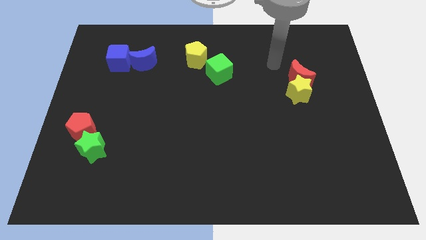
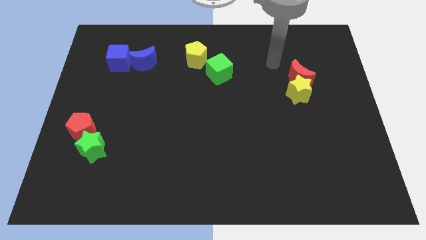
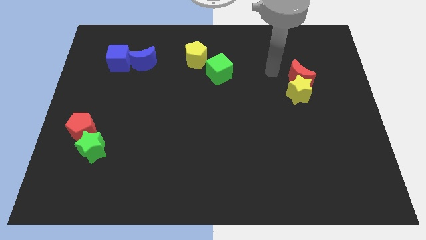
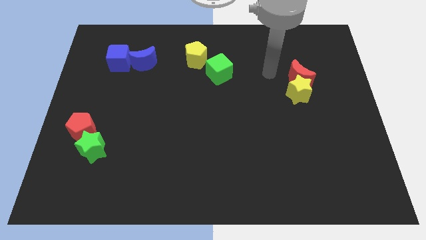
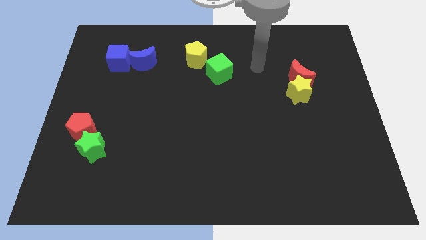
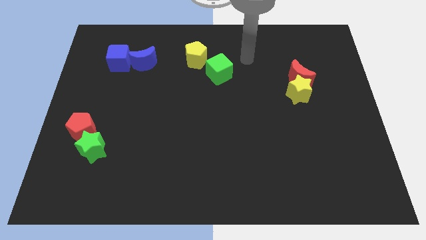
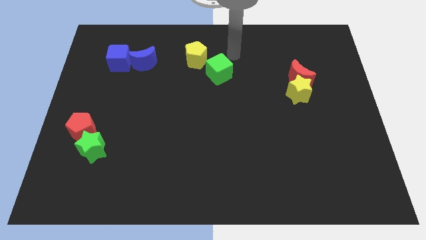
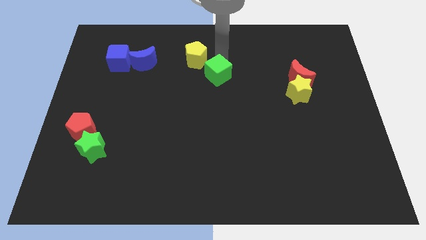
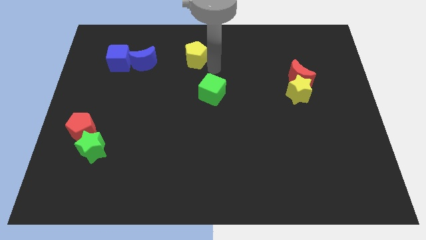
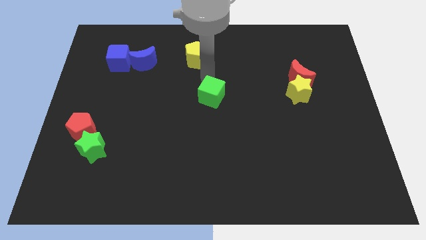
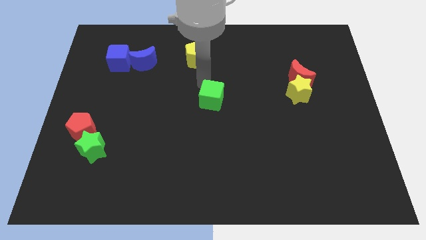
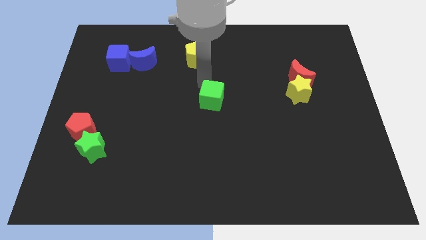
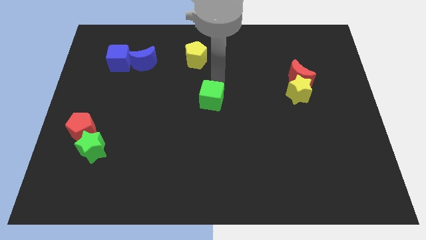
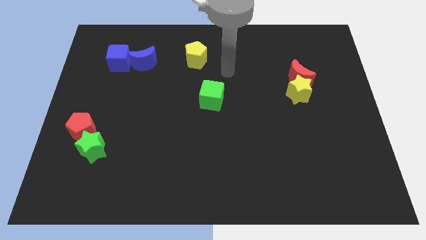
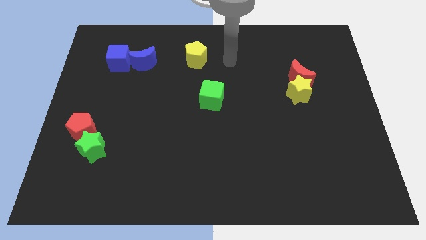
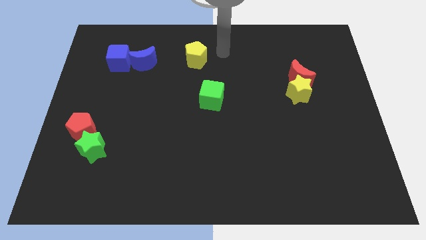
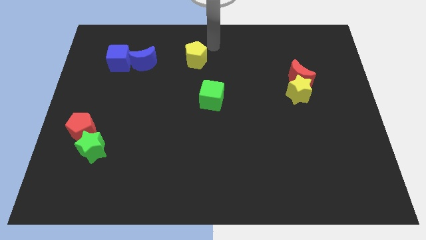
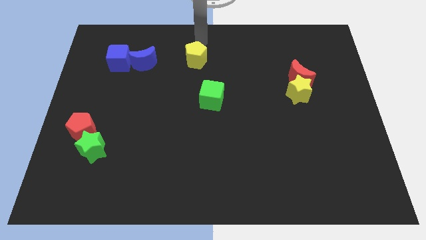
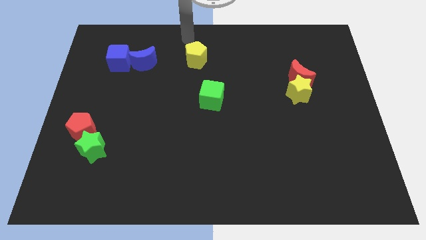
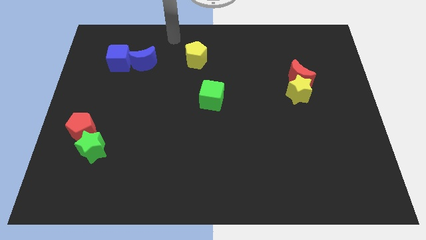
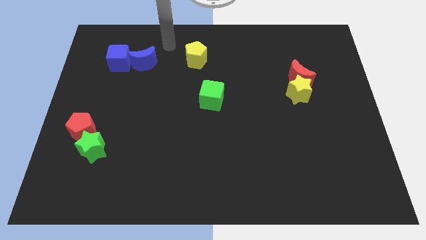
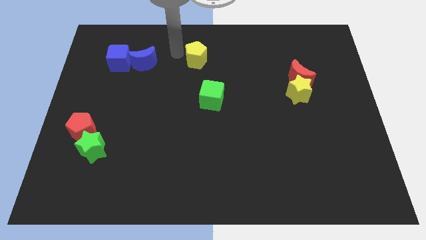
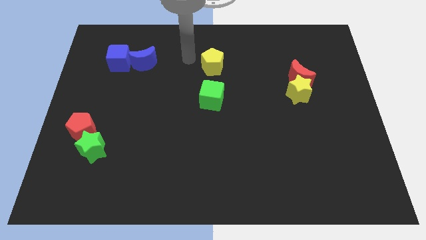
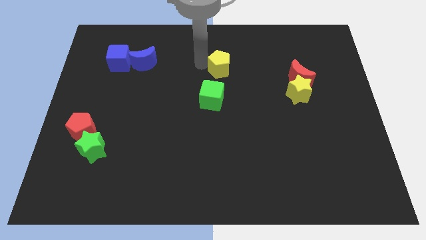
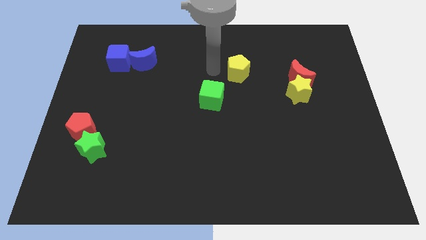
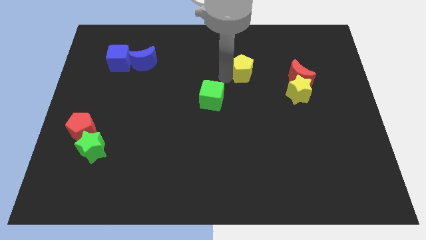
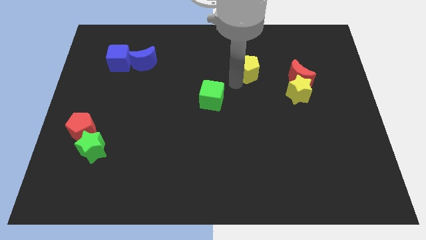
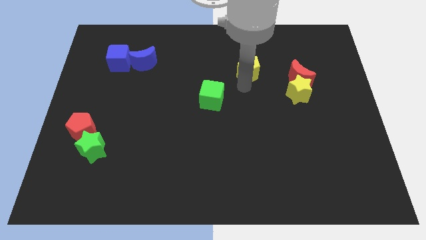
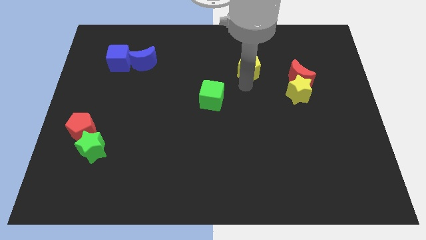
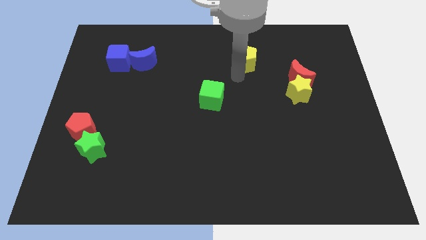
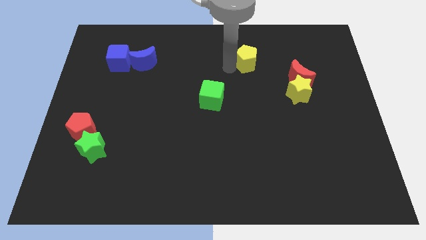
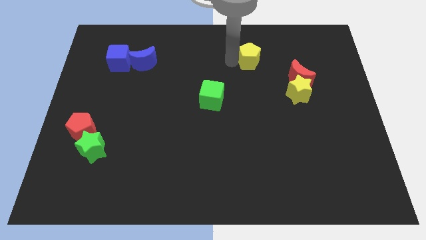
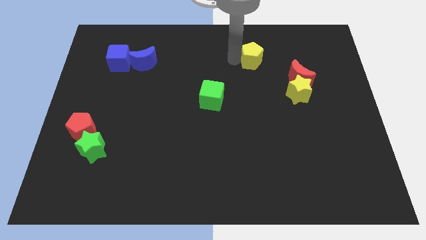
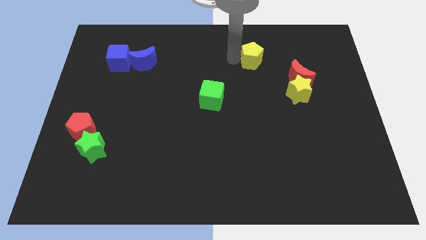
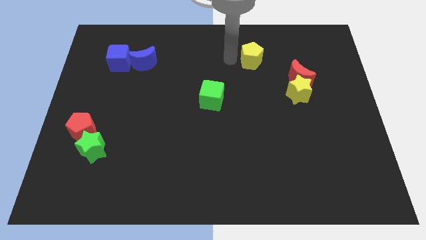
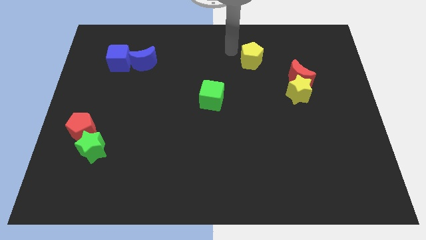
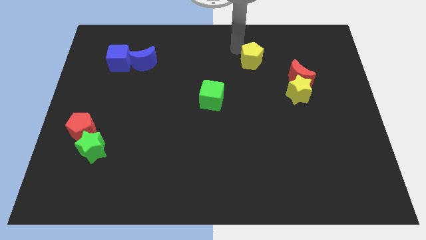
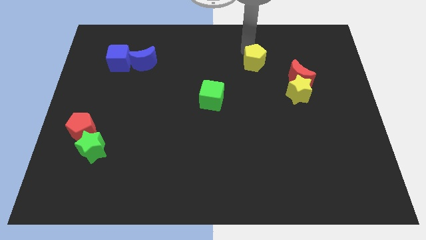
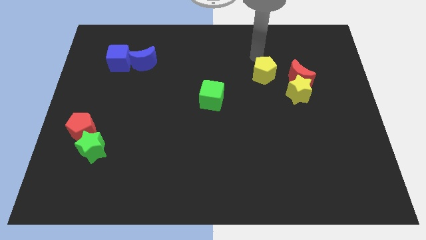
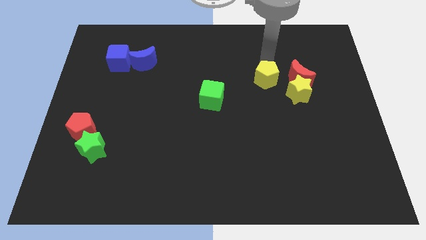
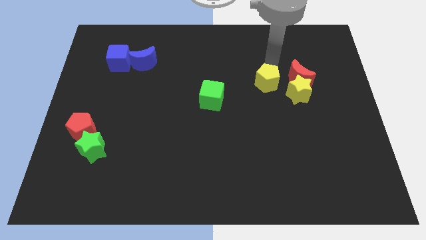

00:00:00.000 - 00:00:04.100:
drag yellow pentagon towards right side of the board

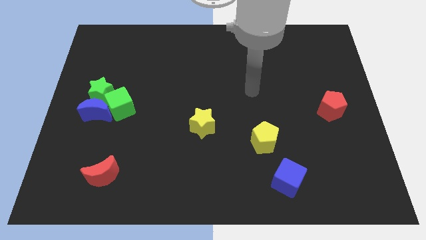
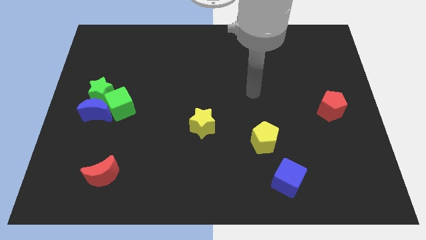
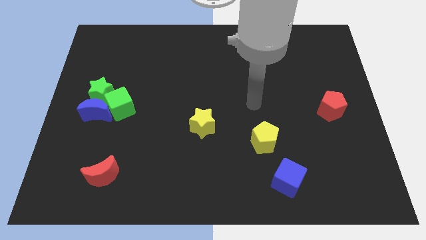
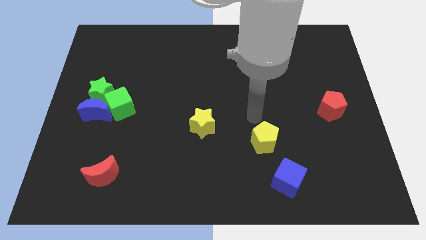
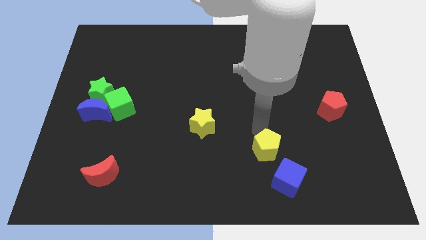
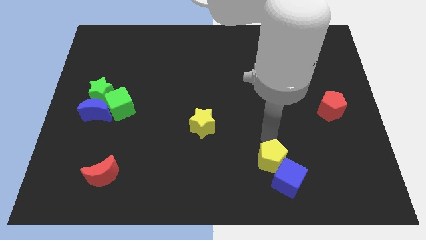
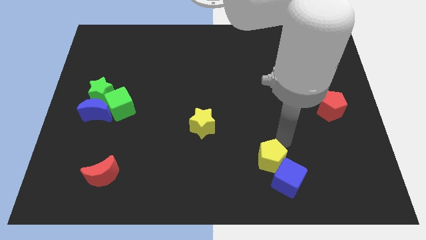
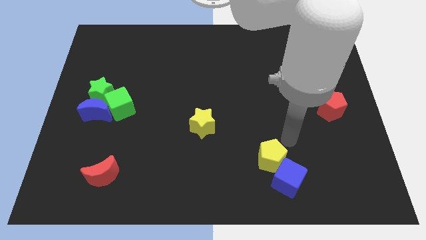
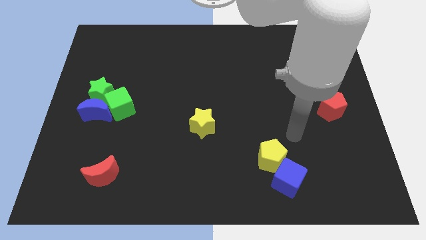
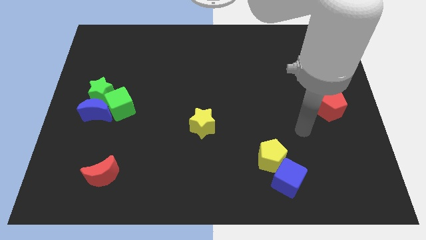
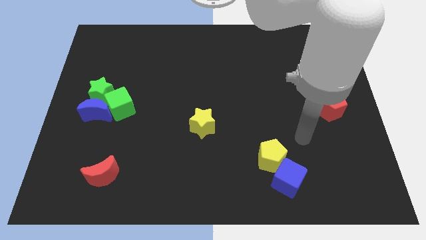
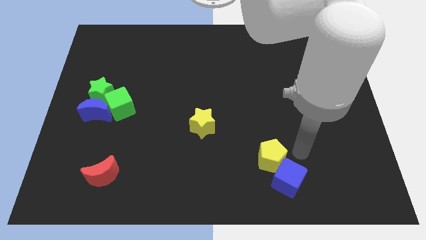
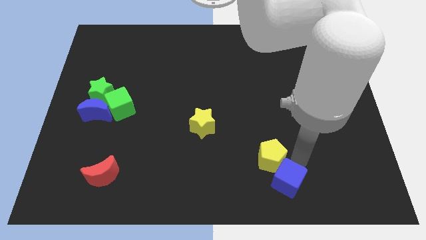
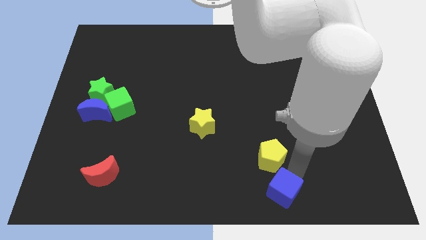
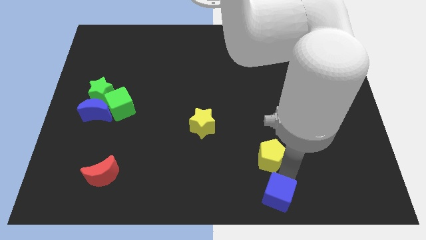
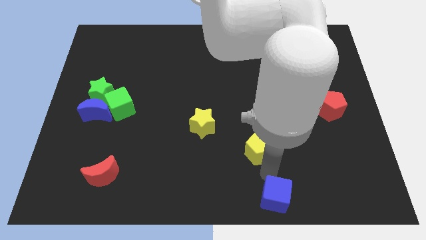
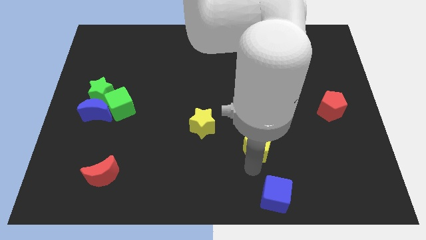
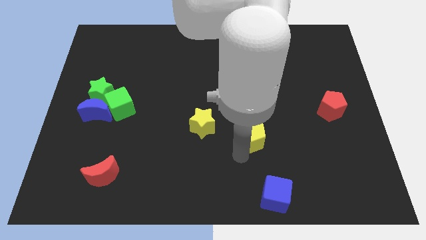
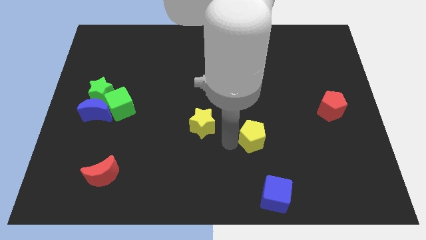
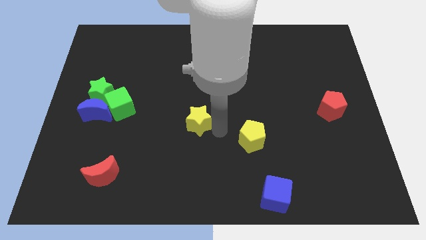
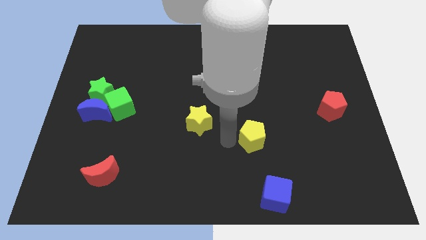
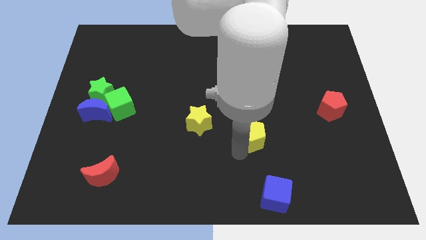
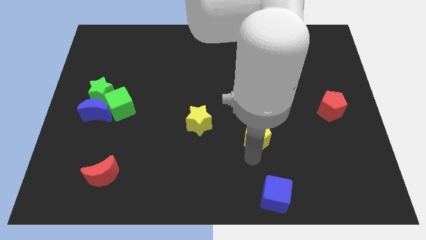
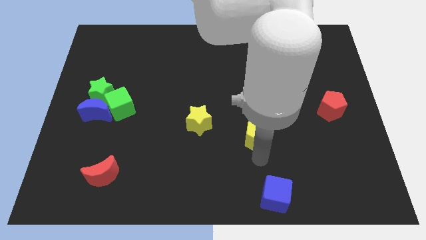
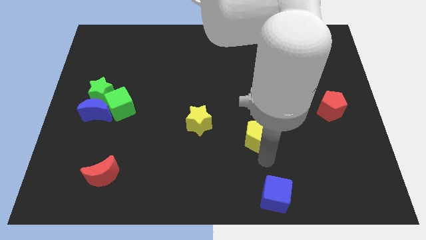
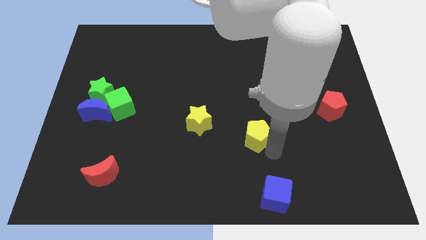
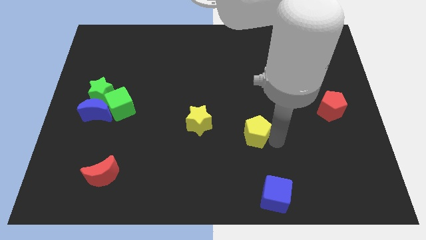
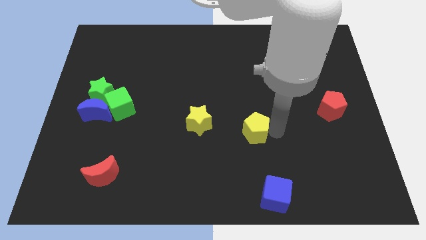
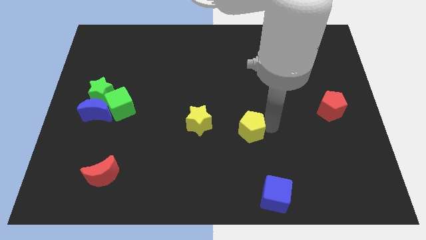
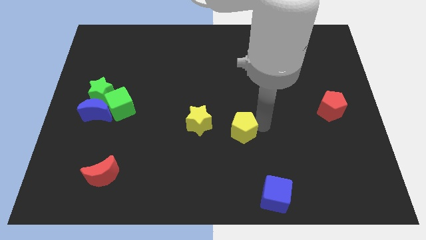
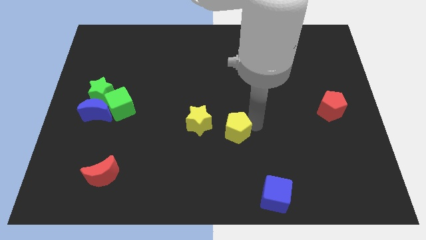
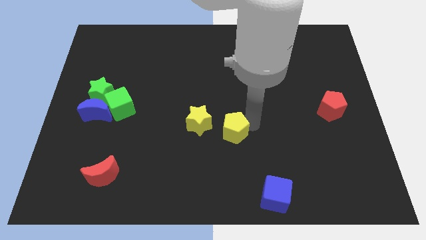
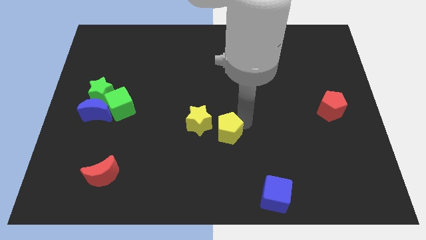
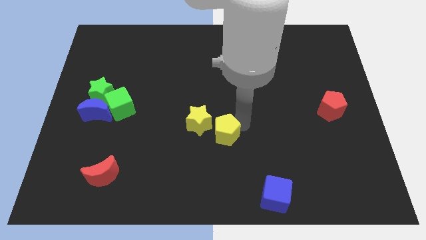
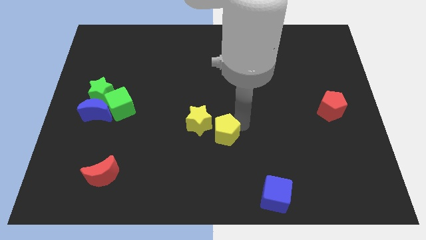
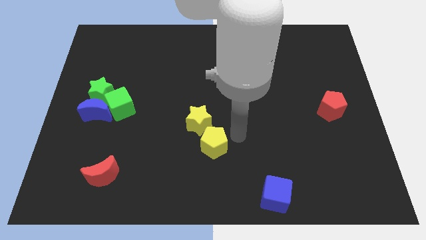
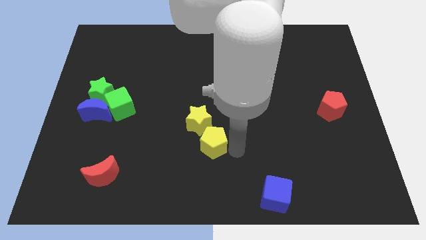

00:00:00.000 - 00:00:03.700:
slide the yellow pentagon to the bottom right of the yellow star

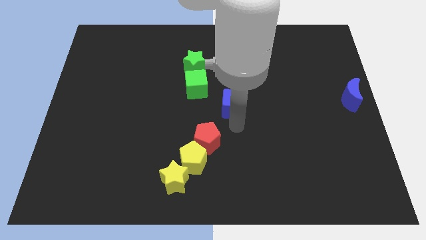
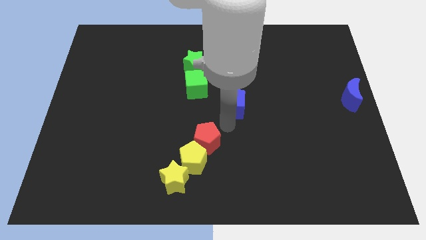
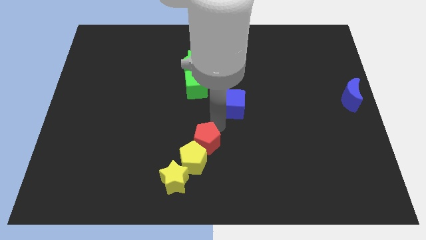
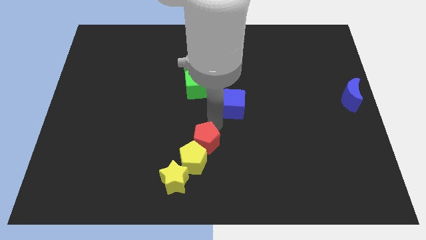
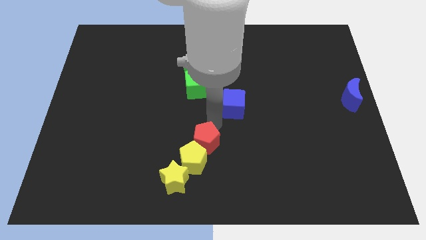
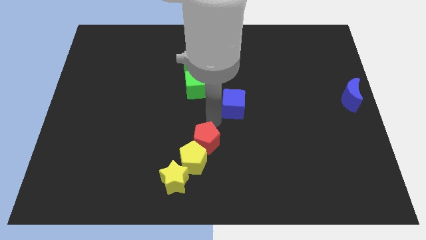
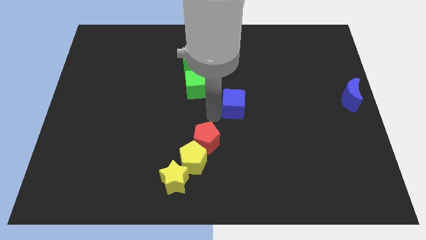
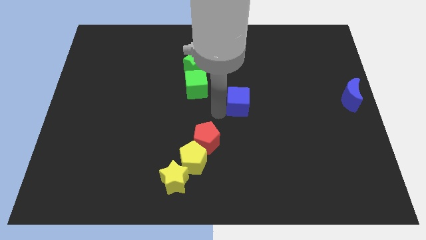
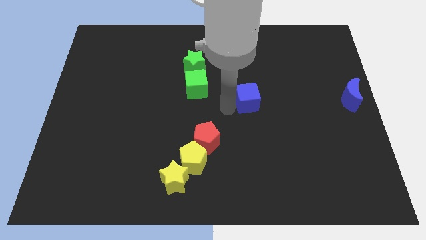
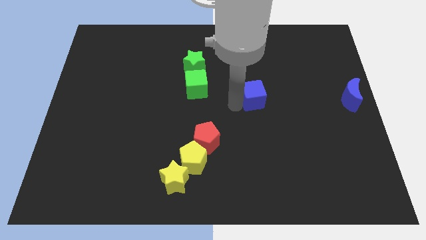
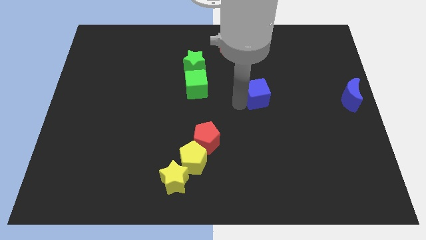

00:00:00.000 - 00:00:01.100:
slide blue cube away from the center

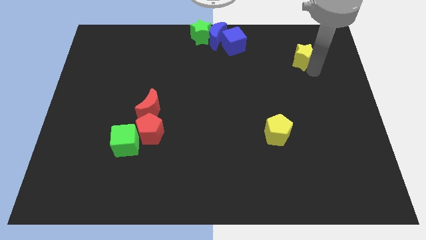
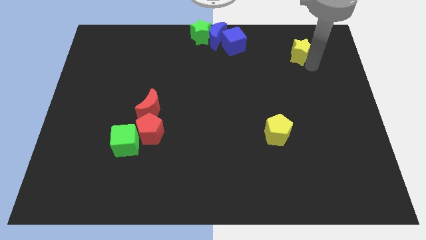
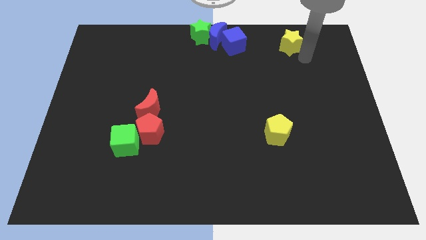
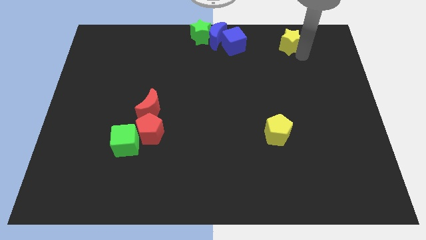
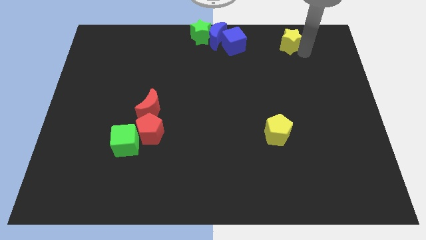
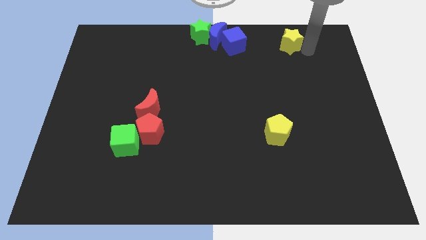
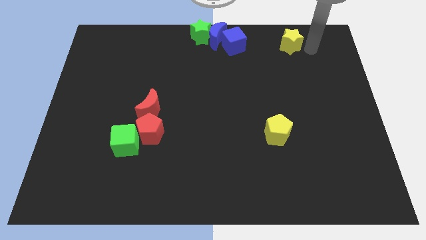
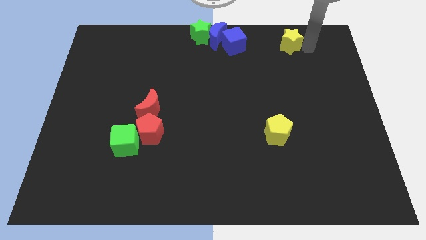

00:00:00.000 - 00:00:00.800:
move the yellow star slightly left
